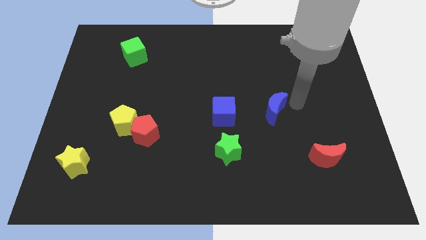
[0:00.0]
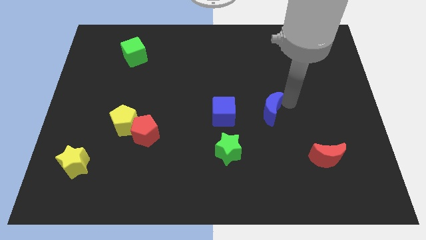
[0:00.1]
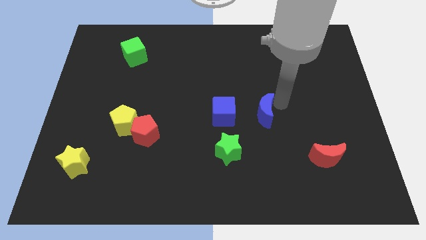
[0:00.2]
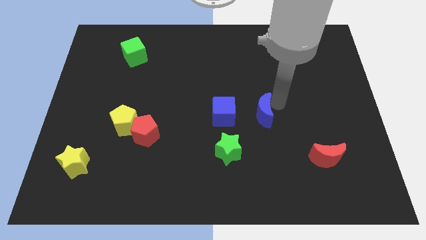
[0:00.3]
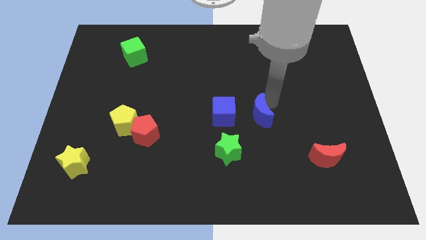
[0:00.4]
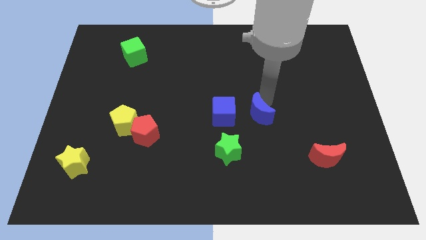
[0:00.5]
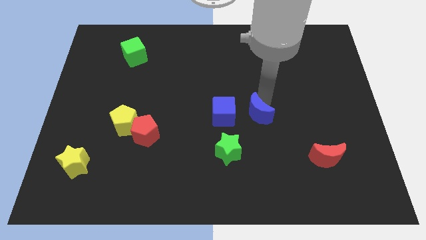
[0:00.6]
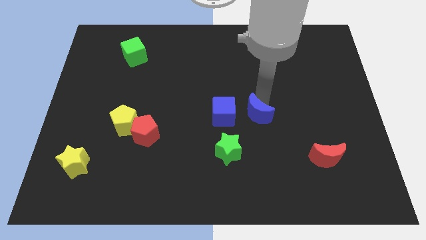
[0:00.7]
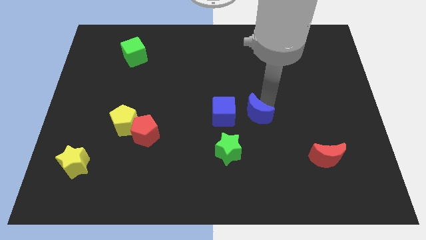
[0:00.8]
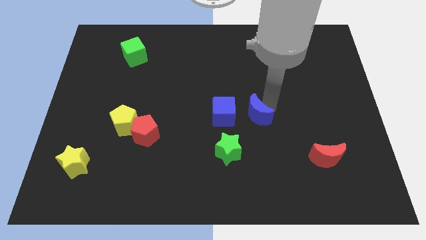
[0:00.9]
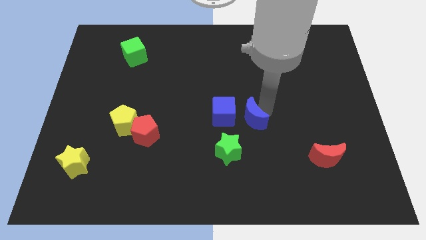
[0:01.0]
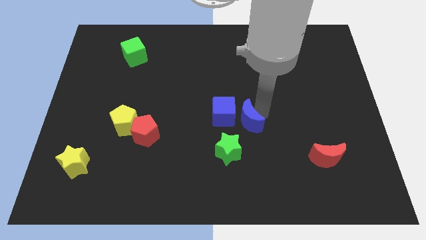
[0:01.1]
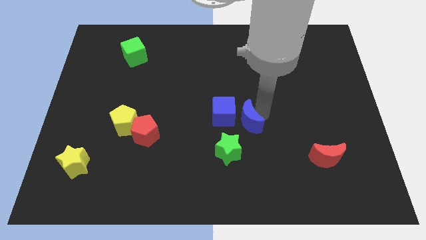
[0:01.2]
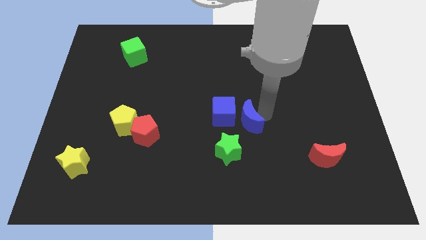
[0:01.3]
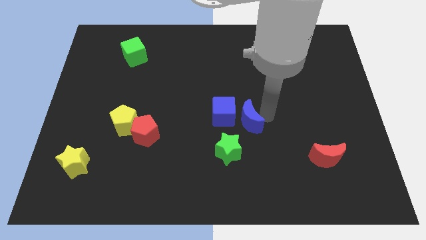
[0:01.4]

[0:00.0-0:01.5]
move the blue crescent to the top right of the green star

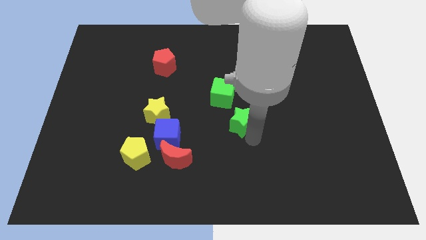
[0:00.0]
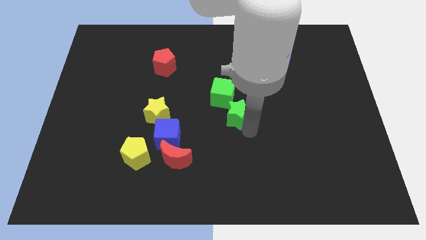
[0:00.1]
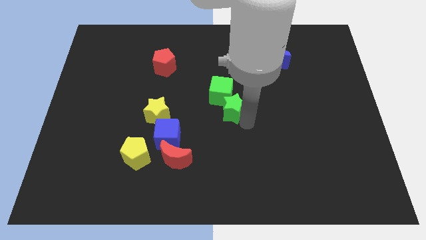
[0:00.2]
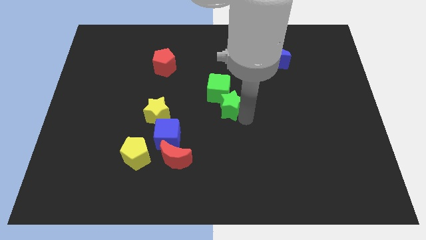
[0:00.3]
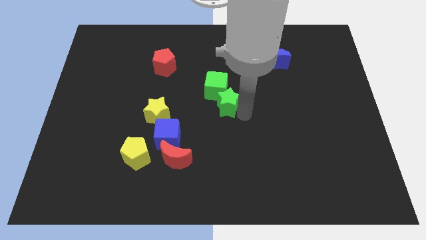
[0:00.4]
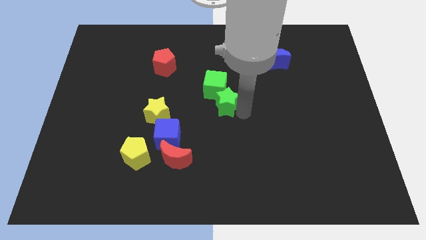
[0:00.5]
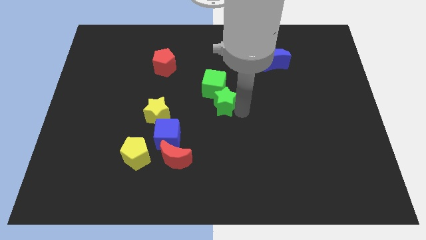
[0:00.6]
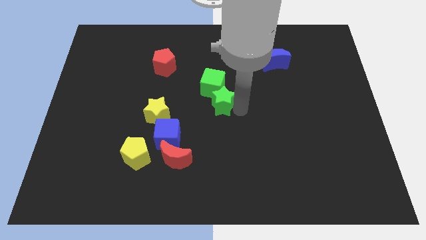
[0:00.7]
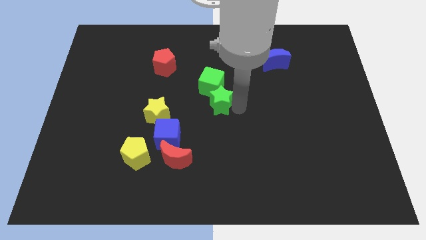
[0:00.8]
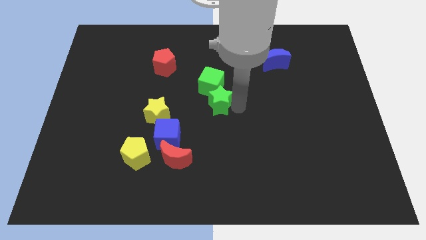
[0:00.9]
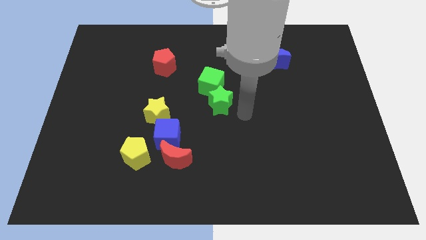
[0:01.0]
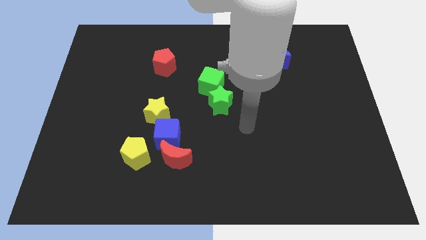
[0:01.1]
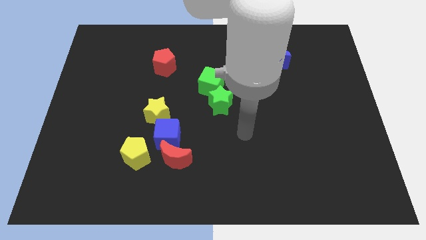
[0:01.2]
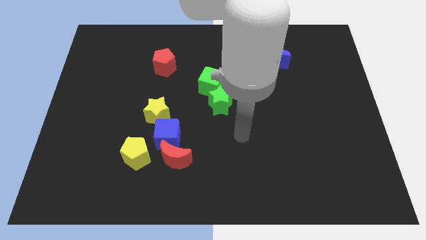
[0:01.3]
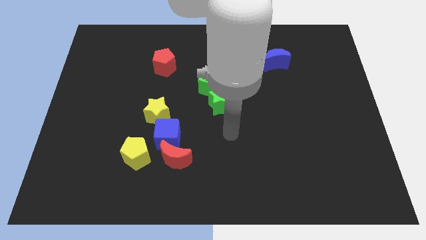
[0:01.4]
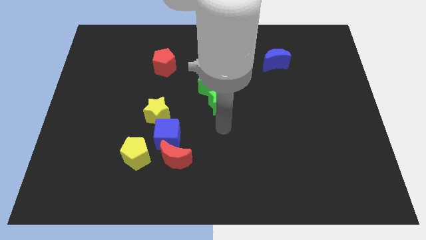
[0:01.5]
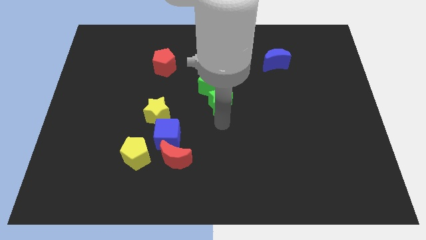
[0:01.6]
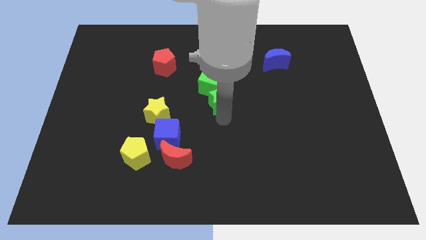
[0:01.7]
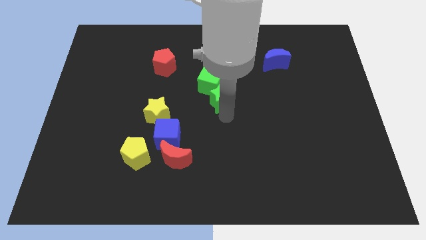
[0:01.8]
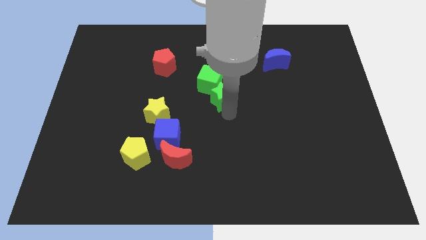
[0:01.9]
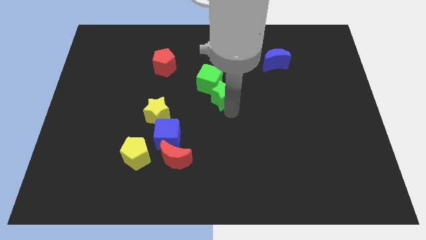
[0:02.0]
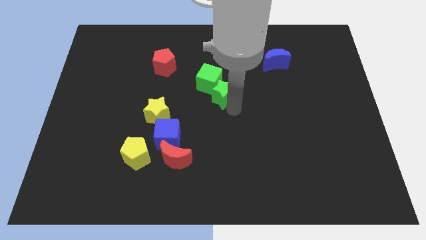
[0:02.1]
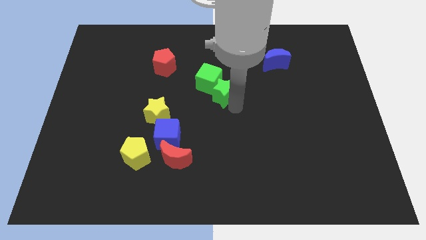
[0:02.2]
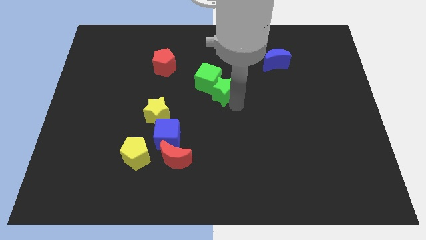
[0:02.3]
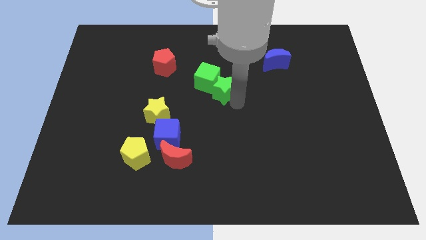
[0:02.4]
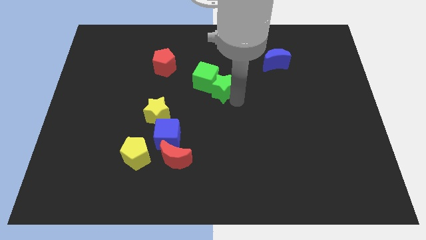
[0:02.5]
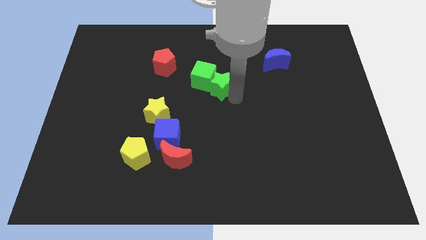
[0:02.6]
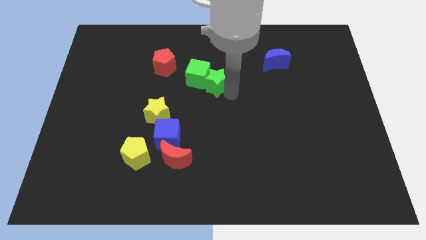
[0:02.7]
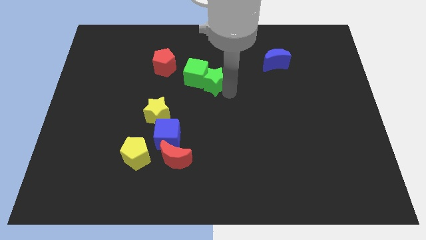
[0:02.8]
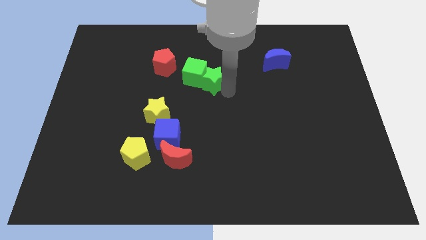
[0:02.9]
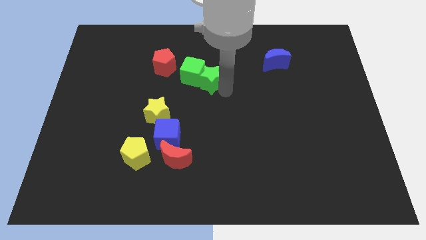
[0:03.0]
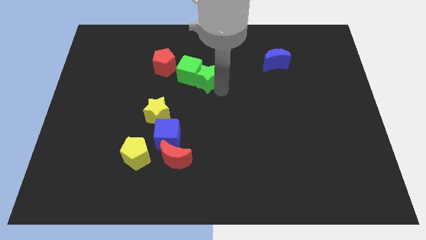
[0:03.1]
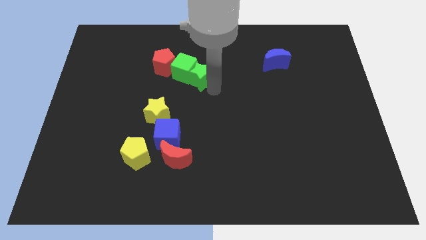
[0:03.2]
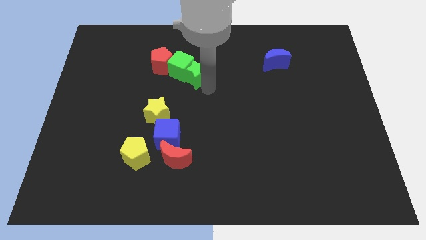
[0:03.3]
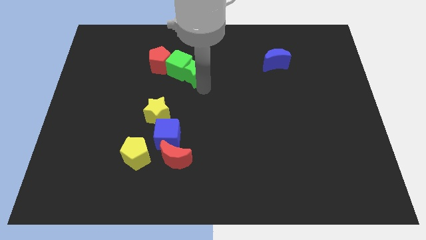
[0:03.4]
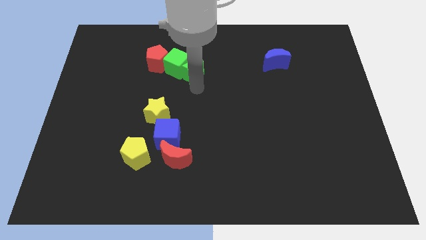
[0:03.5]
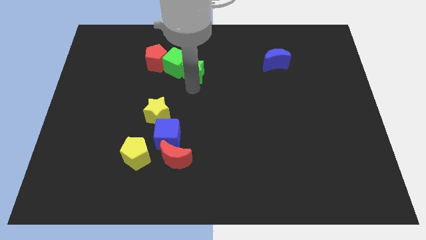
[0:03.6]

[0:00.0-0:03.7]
push the green cube into the red pentagon with the green star

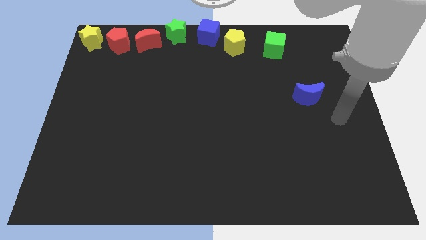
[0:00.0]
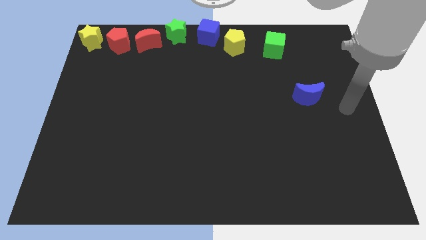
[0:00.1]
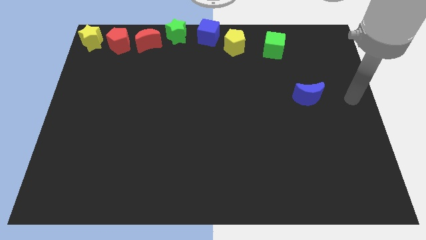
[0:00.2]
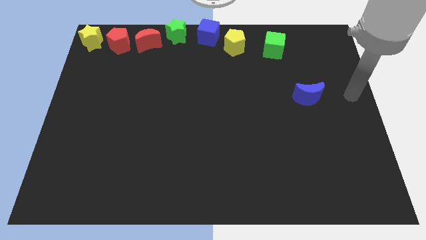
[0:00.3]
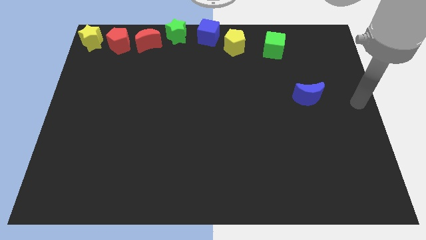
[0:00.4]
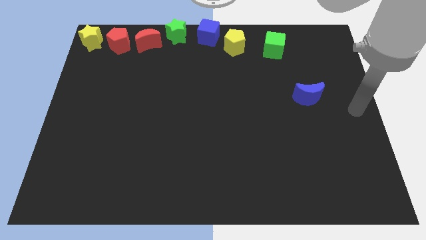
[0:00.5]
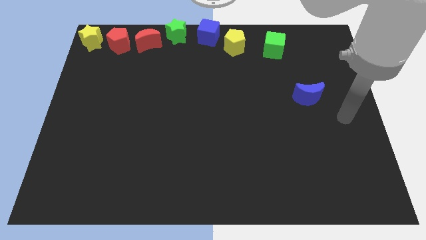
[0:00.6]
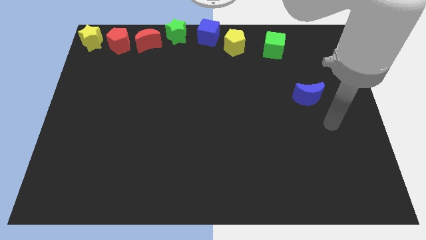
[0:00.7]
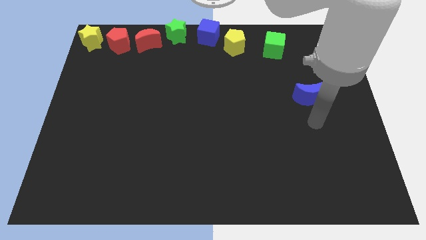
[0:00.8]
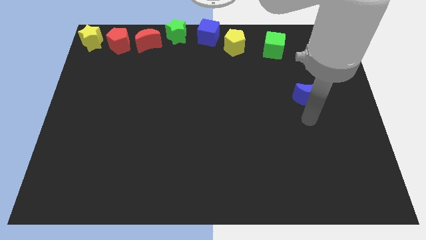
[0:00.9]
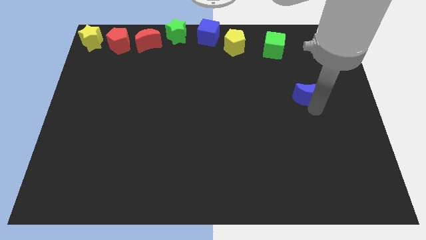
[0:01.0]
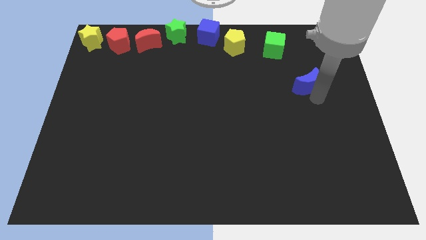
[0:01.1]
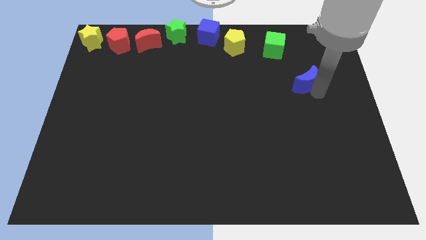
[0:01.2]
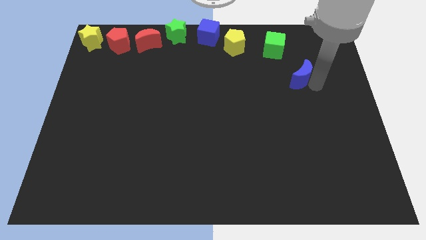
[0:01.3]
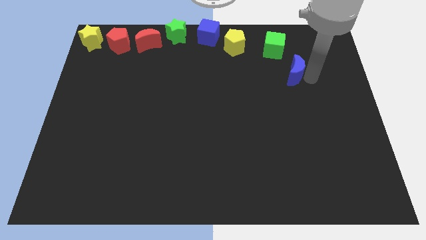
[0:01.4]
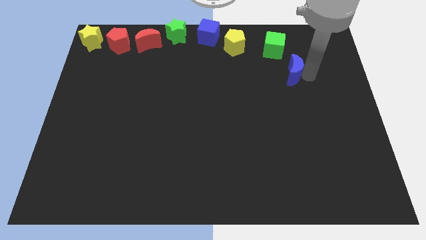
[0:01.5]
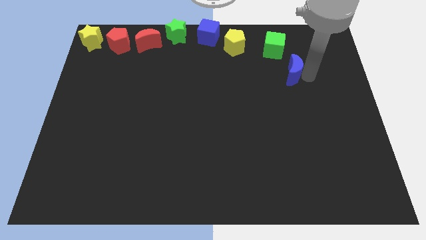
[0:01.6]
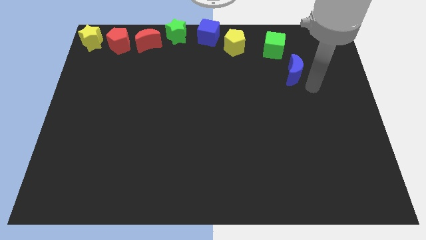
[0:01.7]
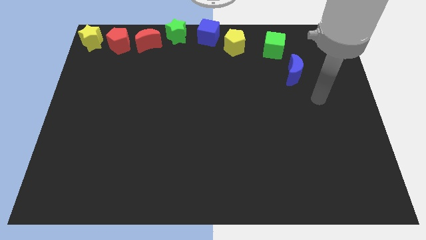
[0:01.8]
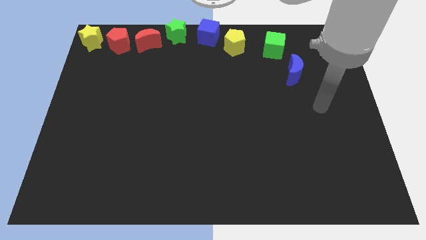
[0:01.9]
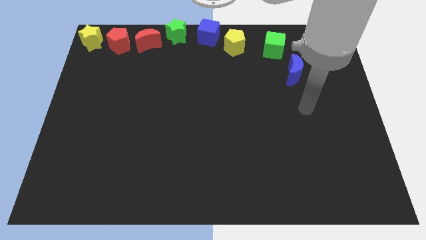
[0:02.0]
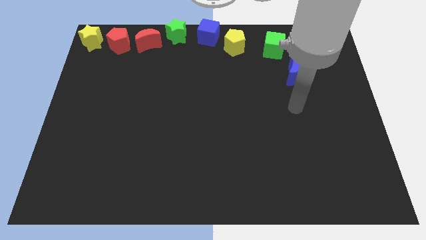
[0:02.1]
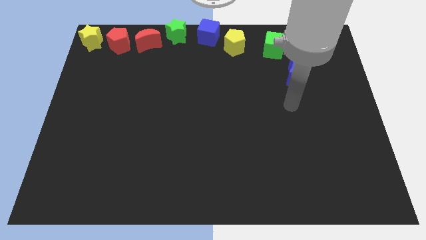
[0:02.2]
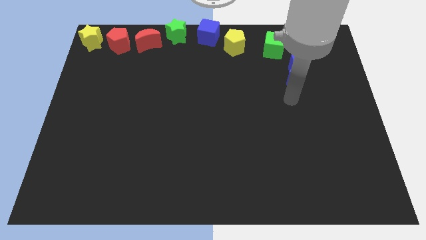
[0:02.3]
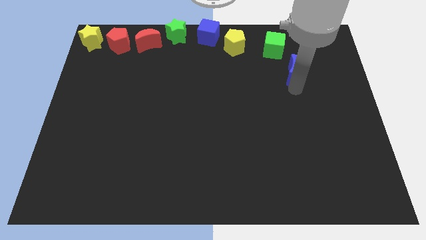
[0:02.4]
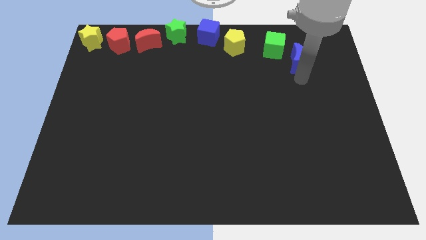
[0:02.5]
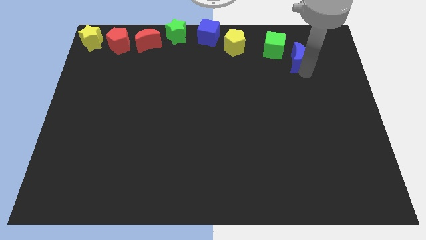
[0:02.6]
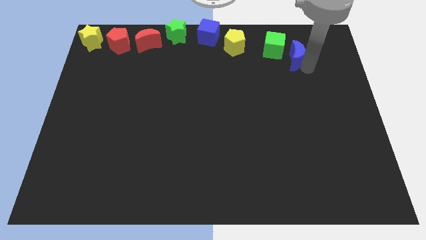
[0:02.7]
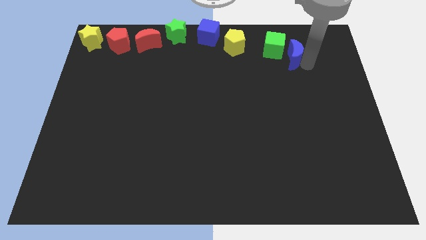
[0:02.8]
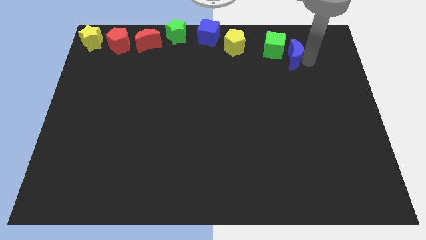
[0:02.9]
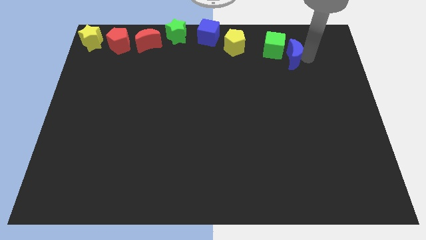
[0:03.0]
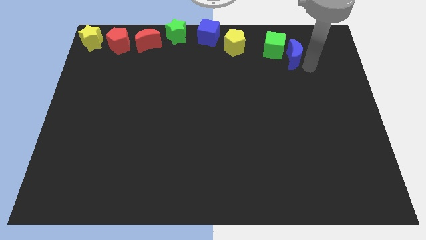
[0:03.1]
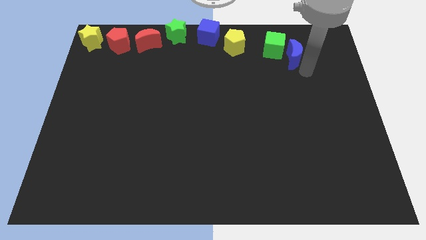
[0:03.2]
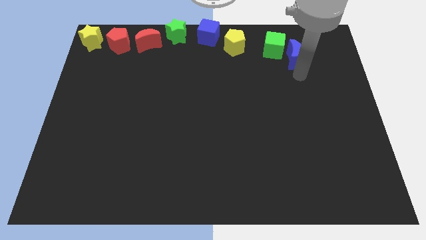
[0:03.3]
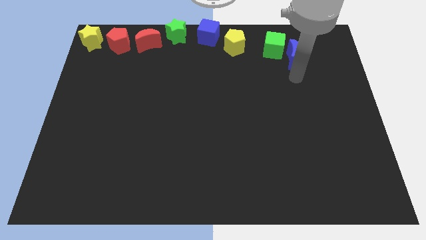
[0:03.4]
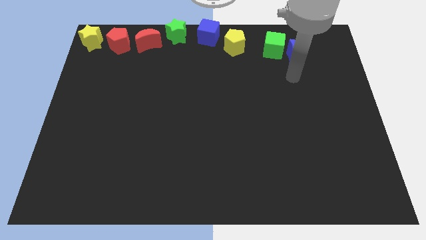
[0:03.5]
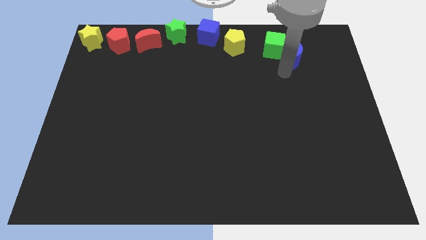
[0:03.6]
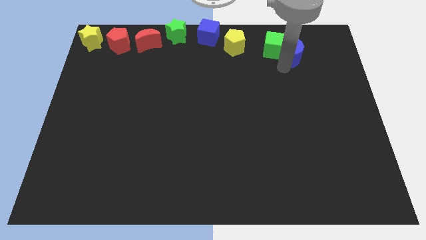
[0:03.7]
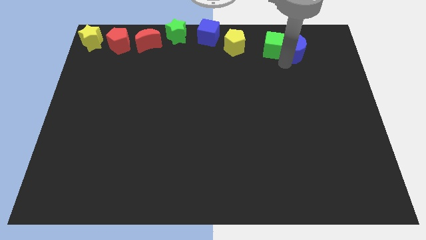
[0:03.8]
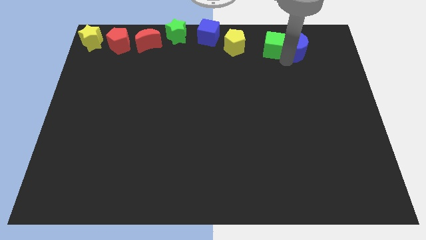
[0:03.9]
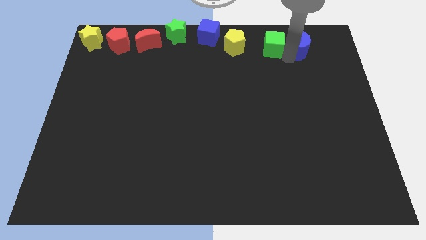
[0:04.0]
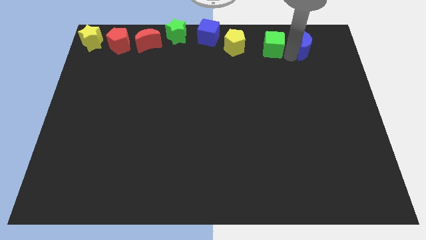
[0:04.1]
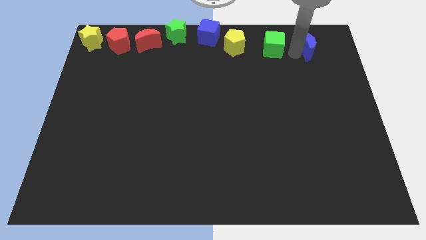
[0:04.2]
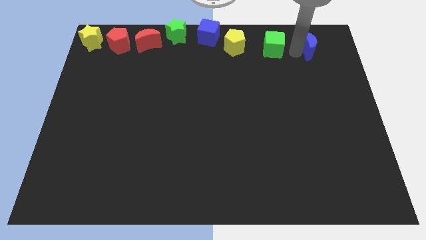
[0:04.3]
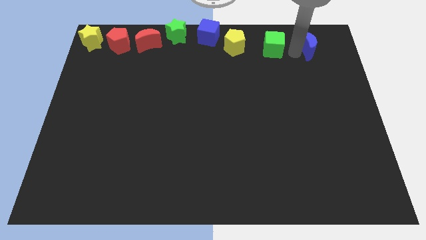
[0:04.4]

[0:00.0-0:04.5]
push the blue moon to the right side of the green cube
